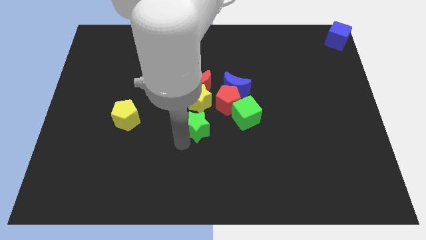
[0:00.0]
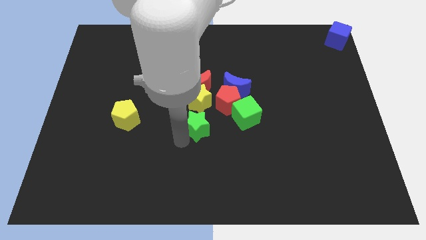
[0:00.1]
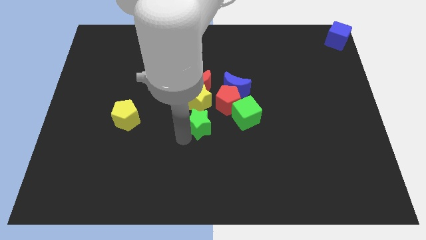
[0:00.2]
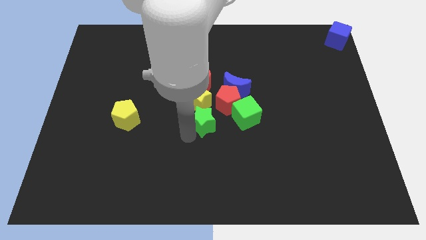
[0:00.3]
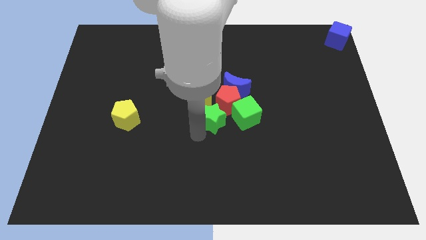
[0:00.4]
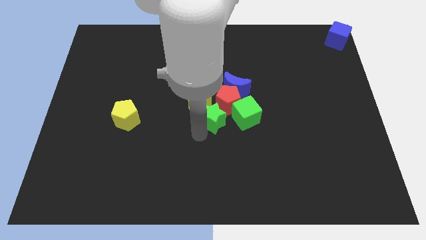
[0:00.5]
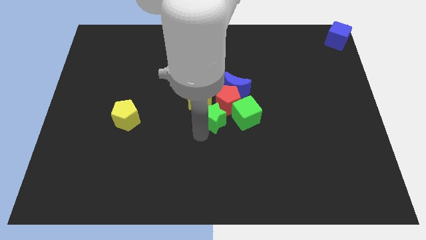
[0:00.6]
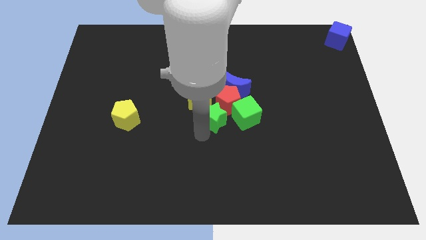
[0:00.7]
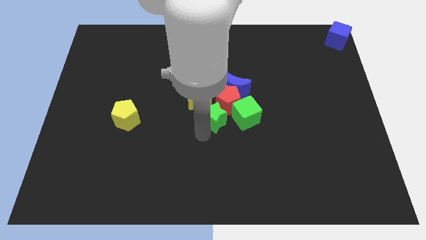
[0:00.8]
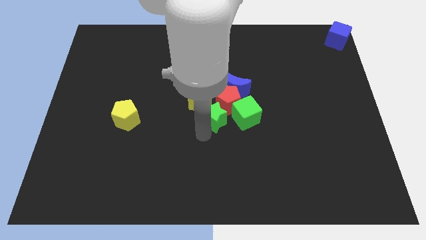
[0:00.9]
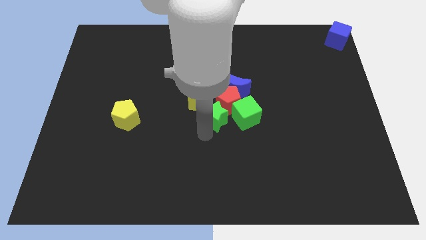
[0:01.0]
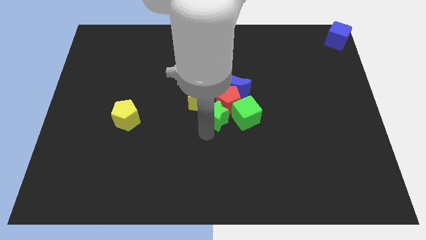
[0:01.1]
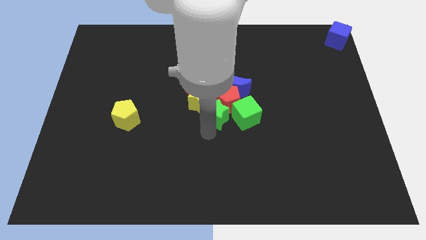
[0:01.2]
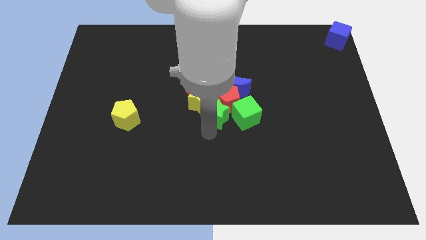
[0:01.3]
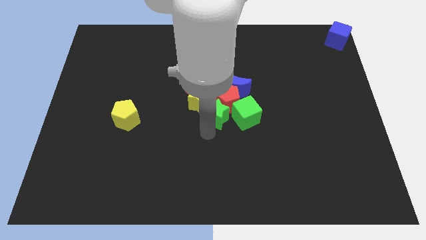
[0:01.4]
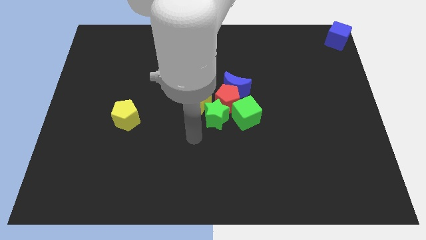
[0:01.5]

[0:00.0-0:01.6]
slide the green star to the bottom left side of the red pentagon

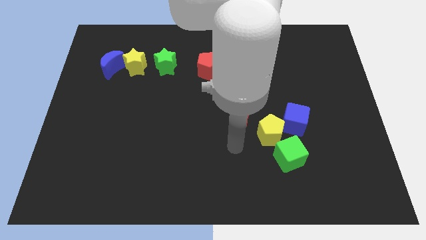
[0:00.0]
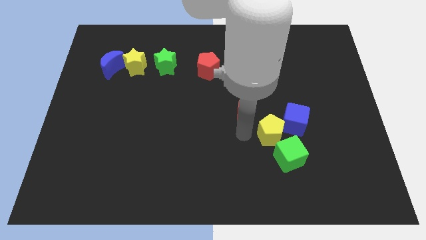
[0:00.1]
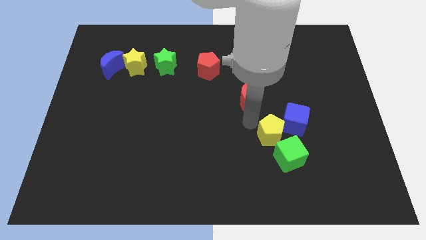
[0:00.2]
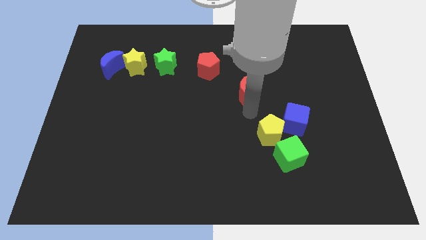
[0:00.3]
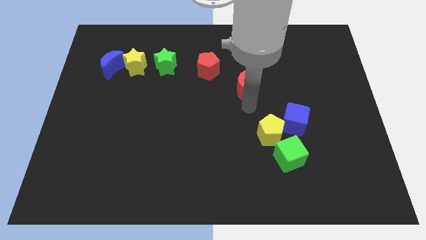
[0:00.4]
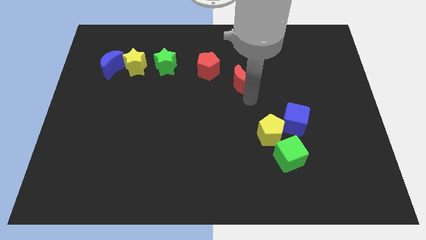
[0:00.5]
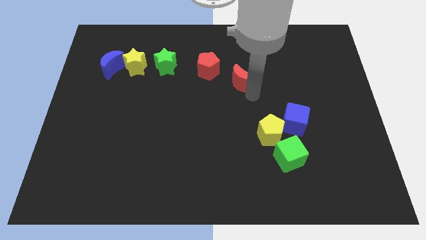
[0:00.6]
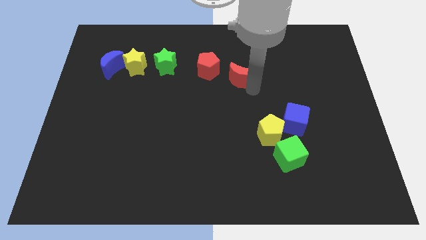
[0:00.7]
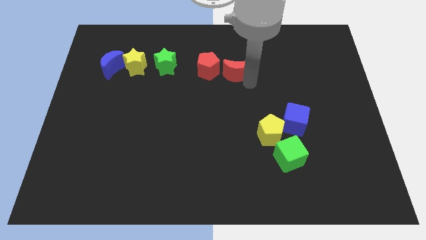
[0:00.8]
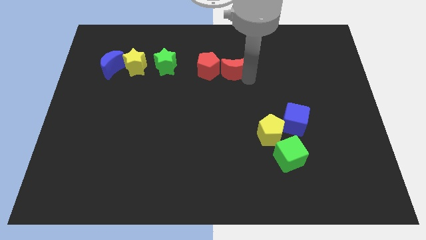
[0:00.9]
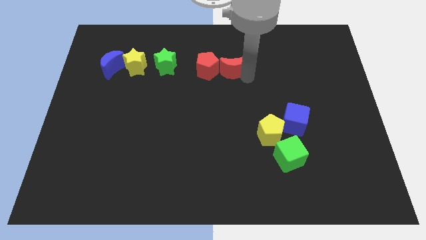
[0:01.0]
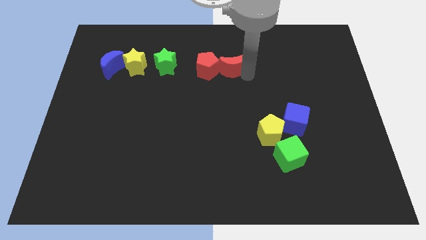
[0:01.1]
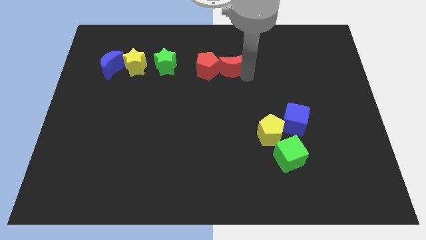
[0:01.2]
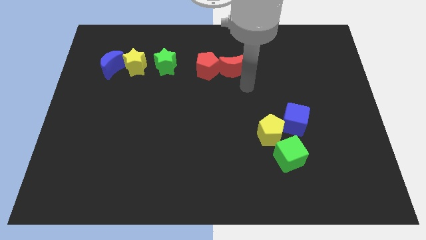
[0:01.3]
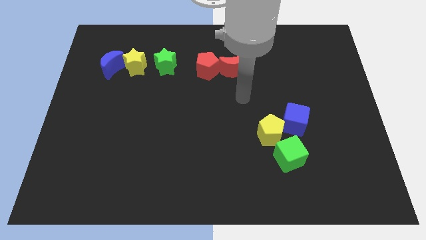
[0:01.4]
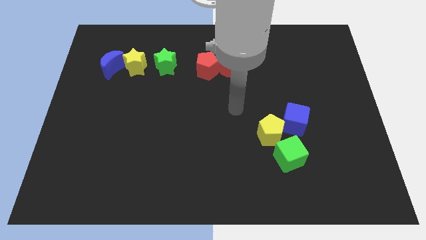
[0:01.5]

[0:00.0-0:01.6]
separate the red crescent from the yellow pentagon

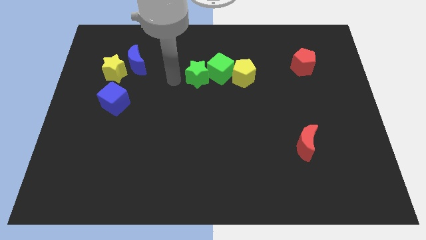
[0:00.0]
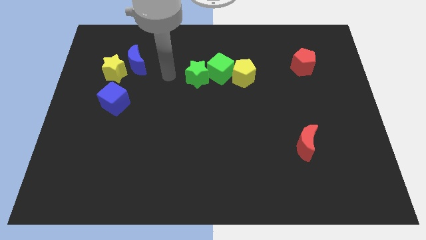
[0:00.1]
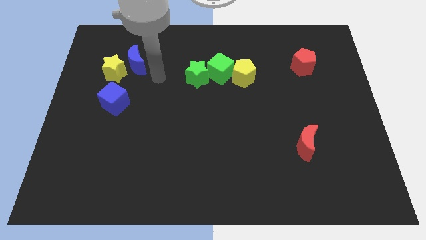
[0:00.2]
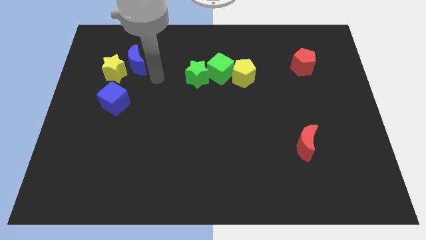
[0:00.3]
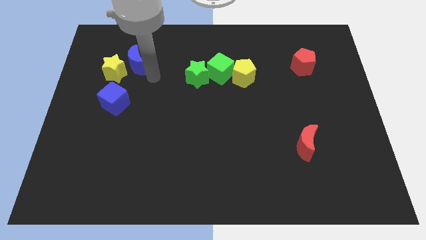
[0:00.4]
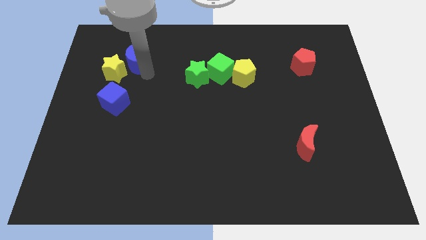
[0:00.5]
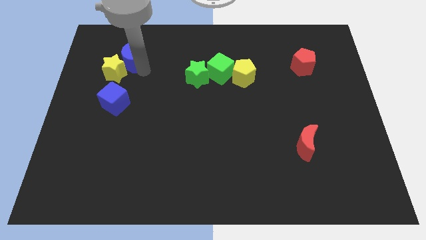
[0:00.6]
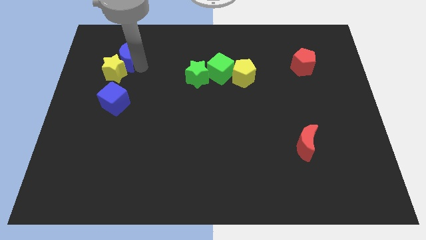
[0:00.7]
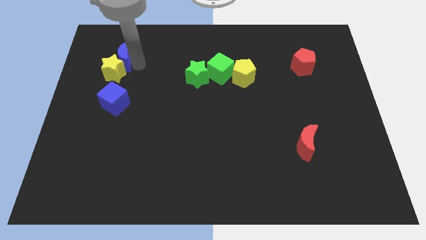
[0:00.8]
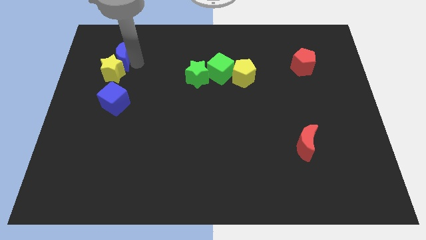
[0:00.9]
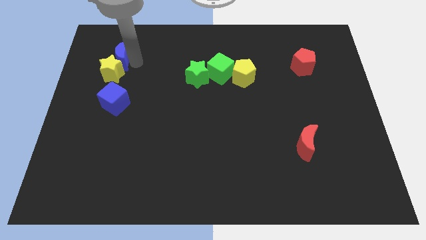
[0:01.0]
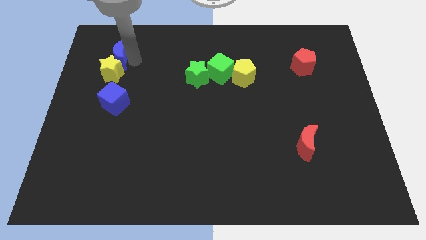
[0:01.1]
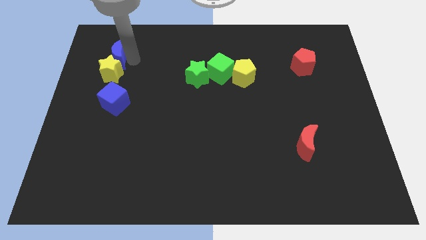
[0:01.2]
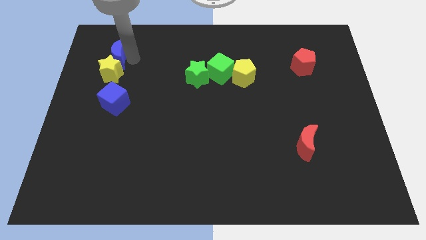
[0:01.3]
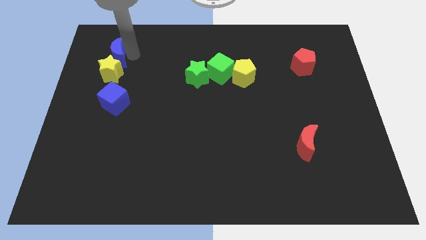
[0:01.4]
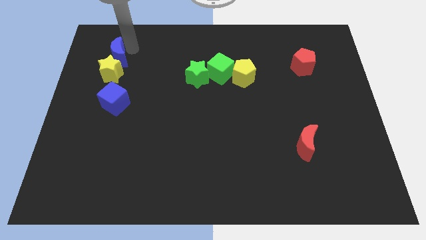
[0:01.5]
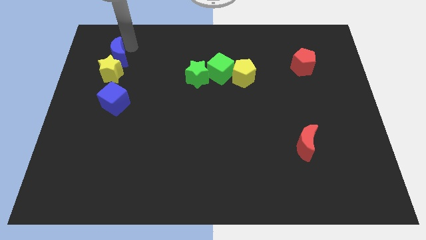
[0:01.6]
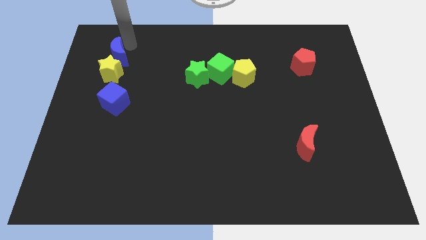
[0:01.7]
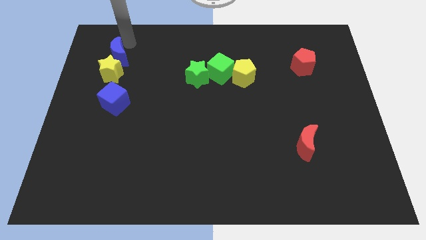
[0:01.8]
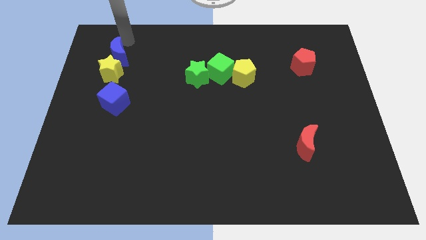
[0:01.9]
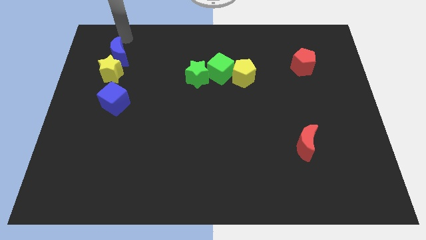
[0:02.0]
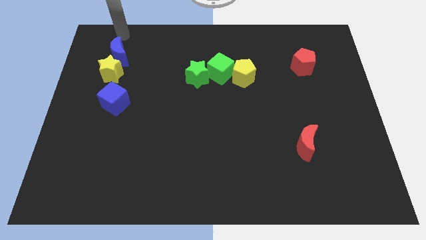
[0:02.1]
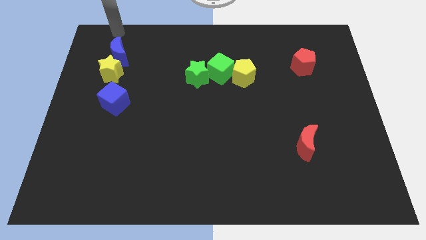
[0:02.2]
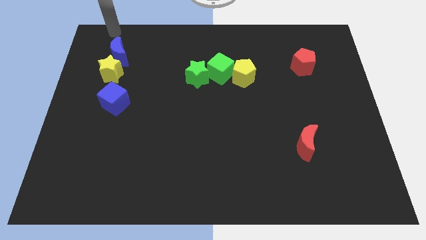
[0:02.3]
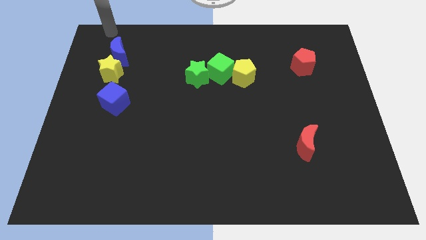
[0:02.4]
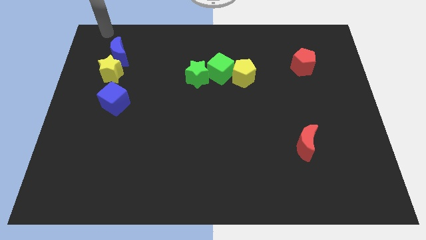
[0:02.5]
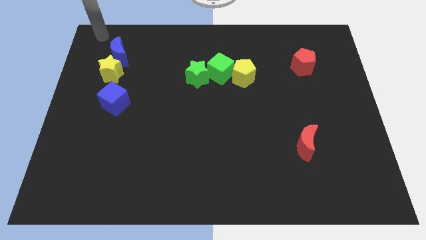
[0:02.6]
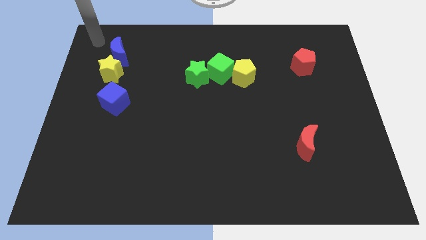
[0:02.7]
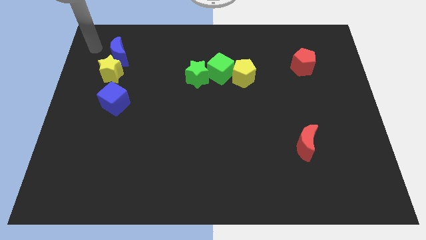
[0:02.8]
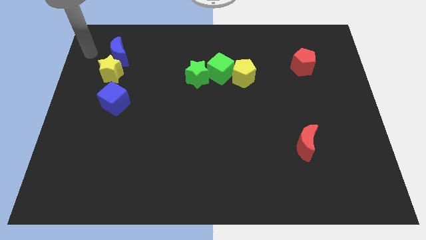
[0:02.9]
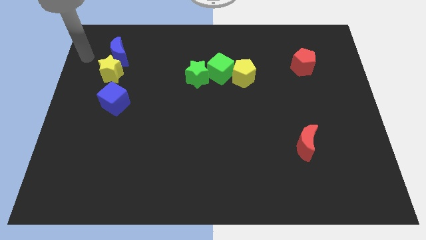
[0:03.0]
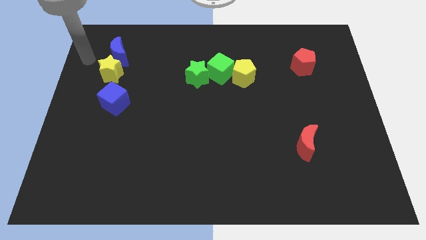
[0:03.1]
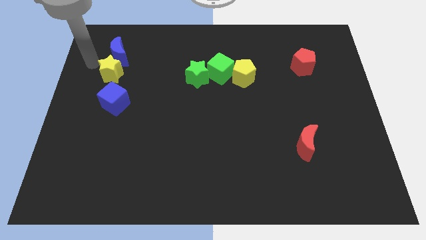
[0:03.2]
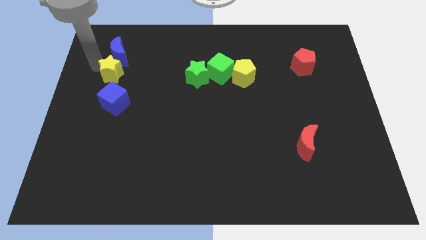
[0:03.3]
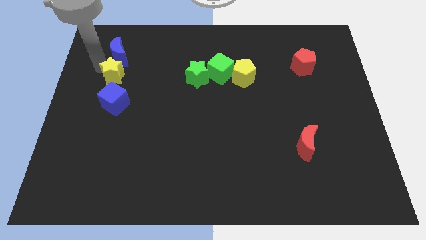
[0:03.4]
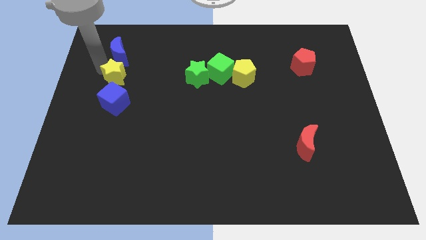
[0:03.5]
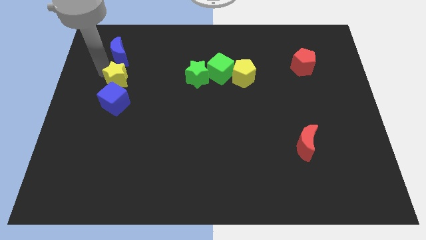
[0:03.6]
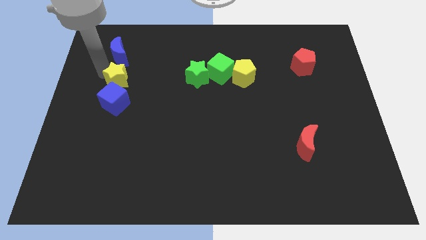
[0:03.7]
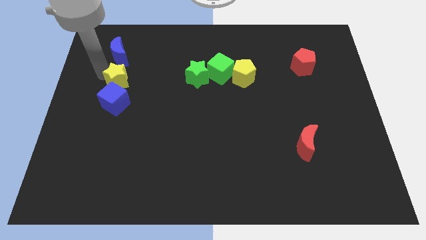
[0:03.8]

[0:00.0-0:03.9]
put the yellow star and blue crescent at the top side of the blue cube

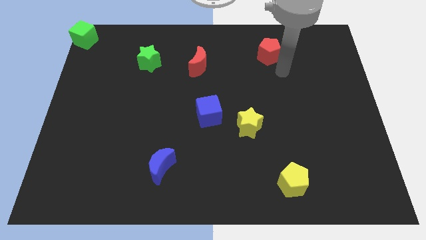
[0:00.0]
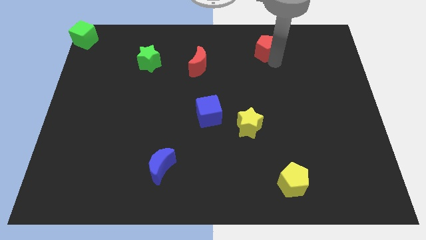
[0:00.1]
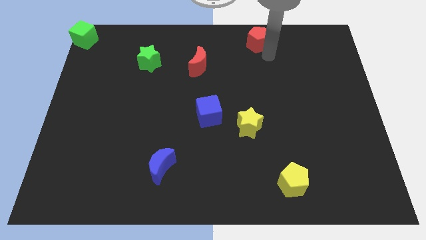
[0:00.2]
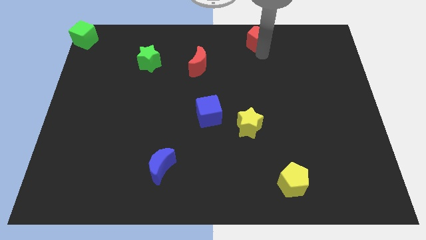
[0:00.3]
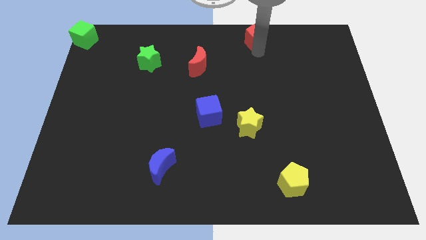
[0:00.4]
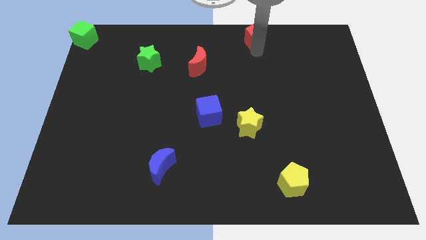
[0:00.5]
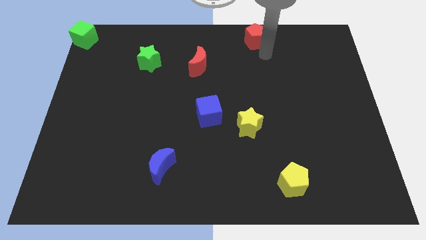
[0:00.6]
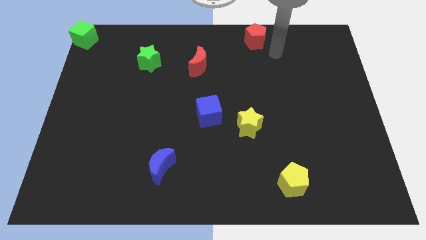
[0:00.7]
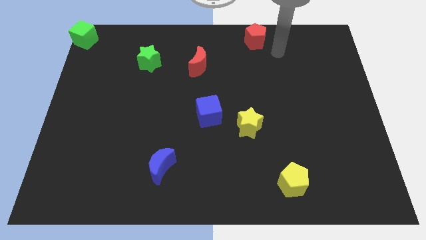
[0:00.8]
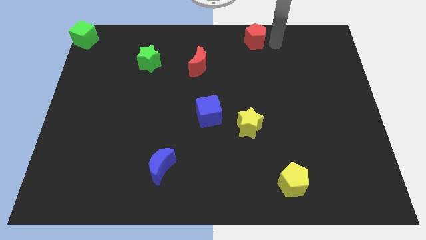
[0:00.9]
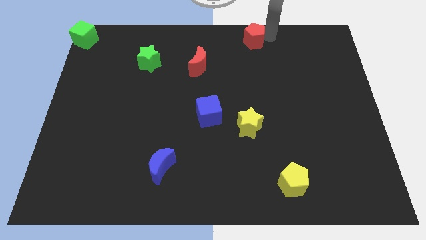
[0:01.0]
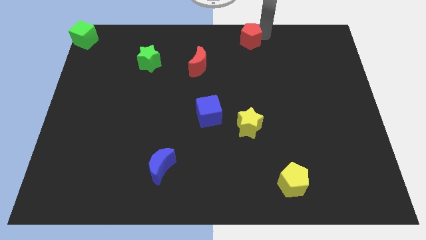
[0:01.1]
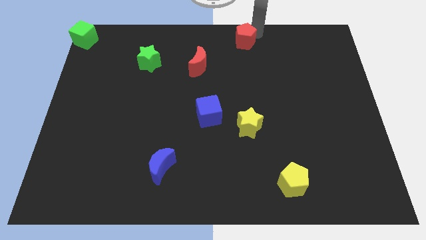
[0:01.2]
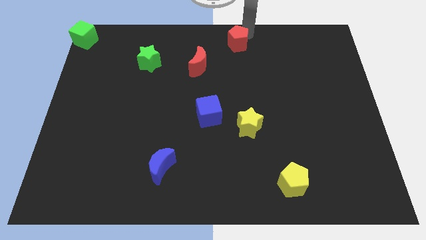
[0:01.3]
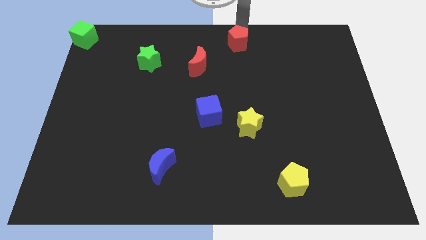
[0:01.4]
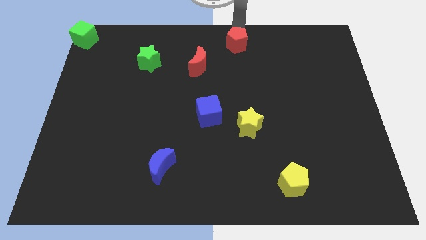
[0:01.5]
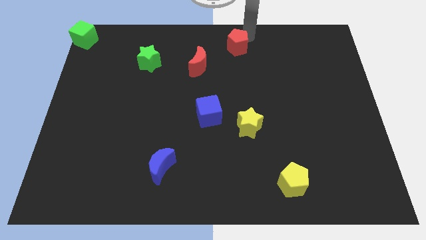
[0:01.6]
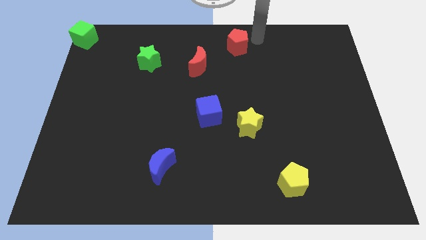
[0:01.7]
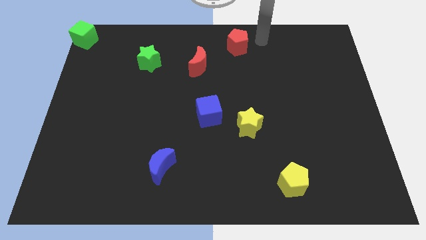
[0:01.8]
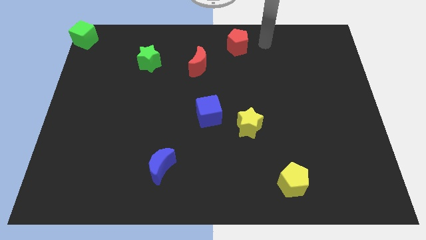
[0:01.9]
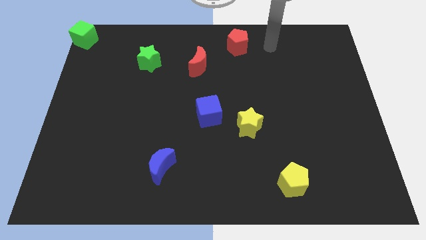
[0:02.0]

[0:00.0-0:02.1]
push red pentagon towards top center
